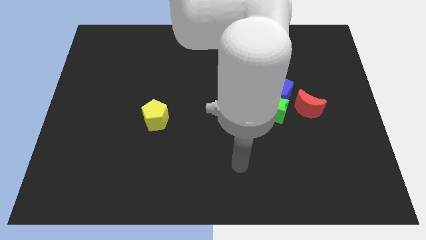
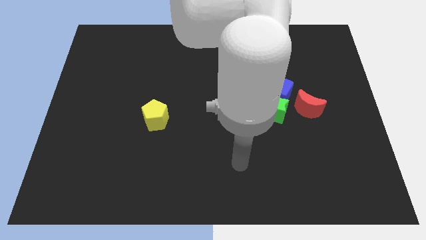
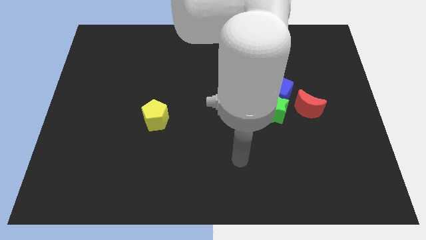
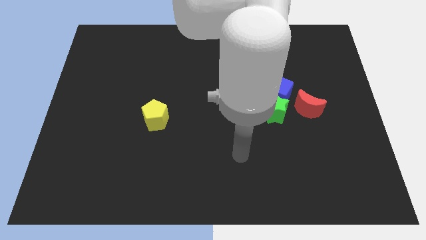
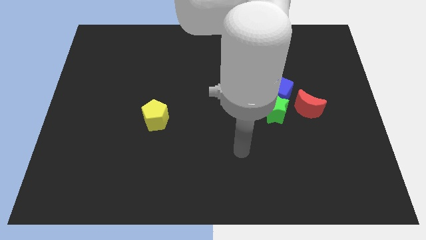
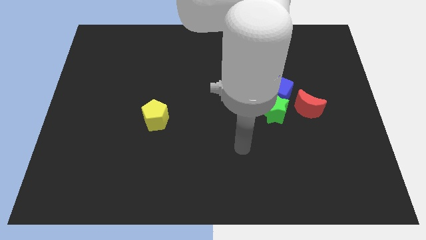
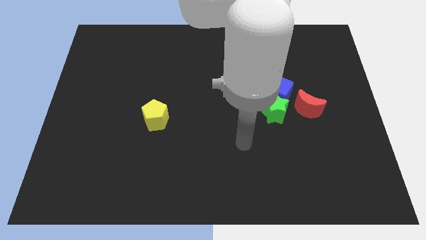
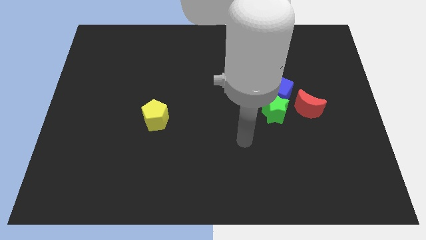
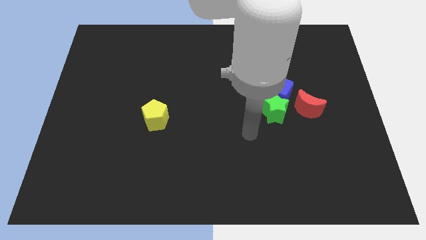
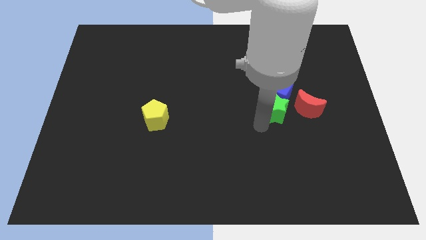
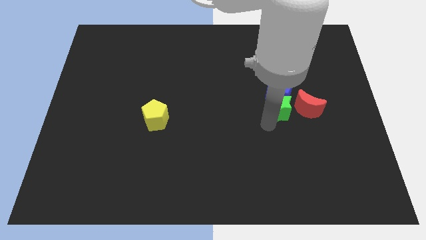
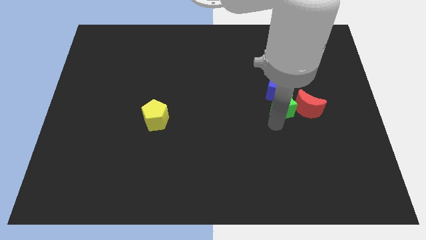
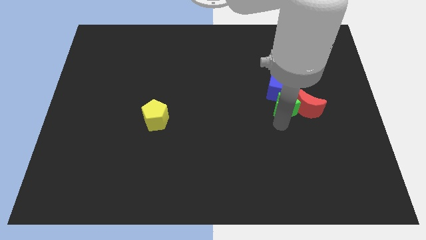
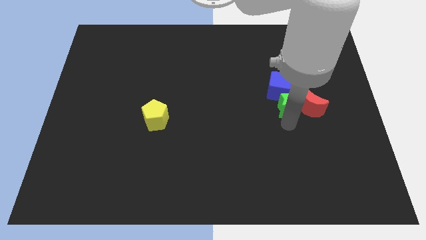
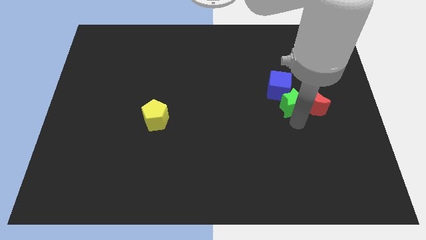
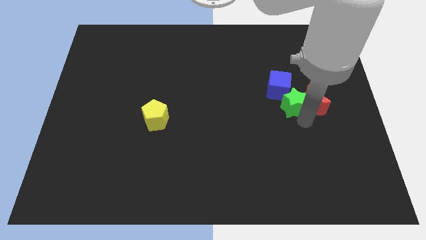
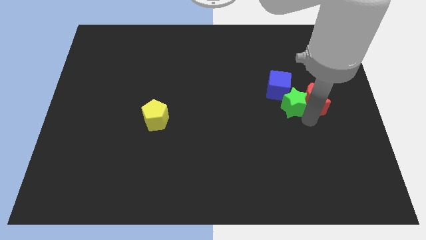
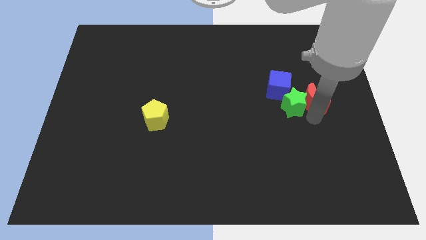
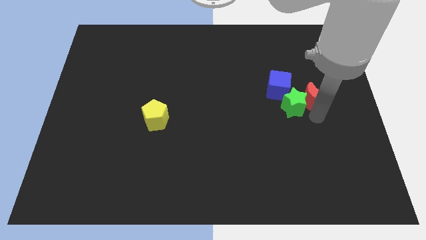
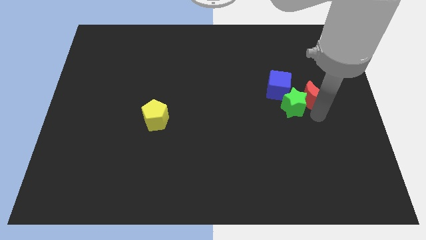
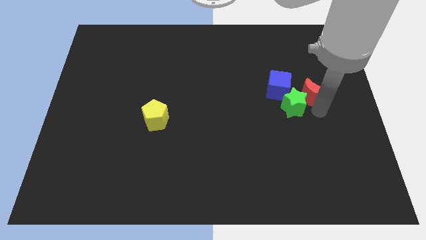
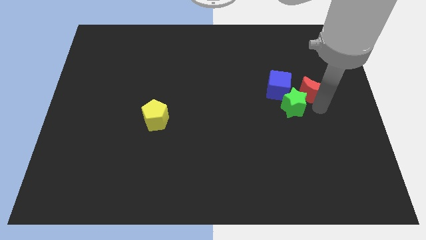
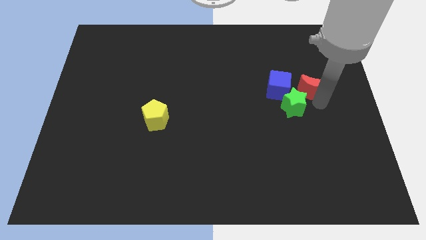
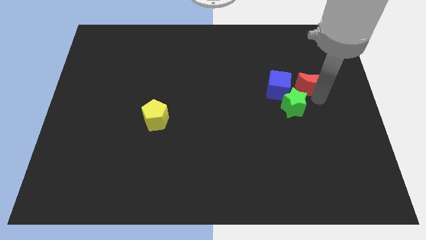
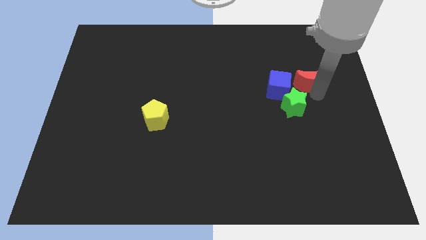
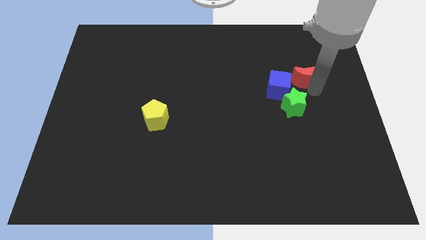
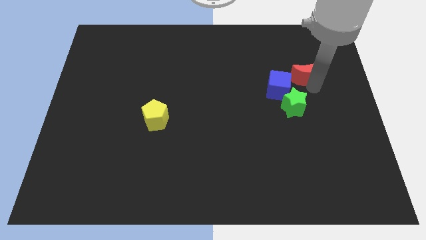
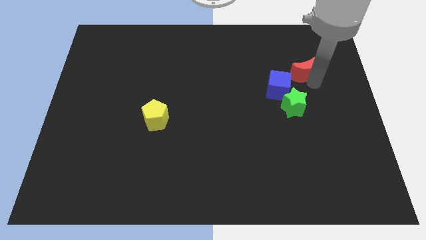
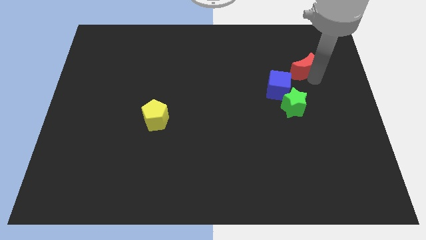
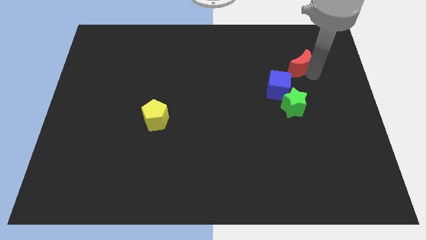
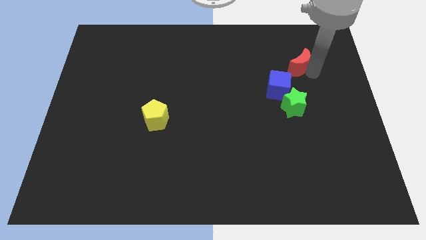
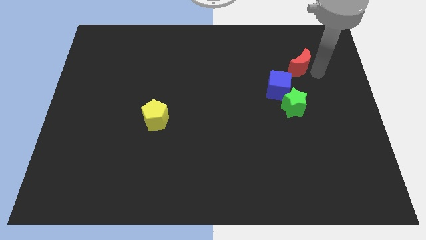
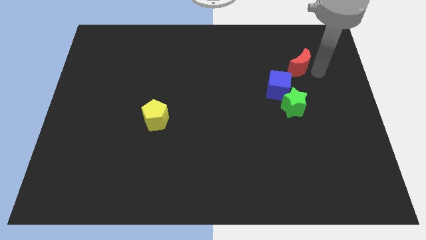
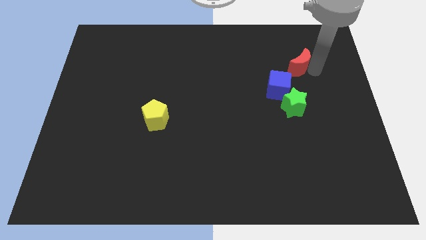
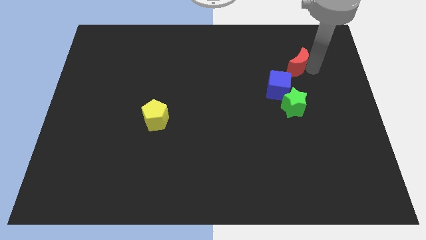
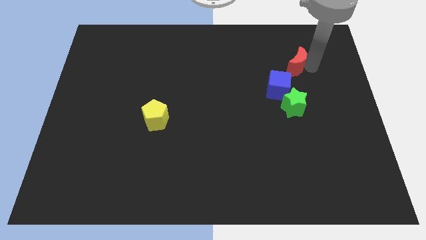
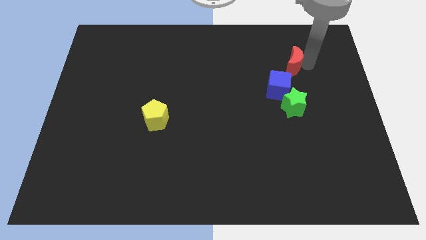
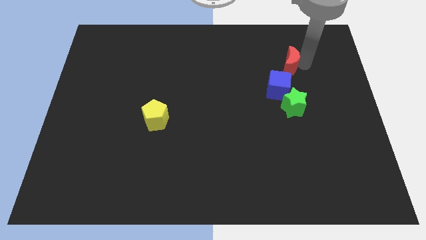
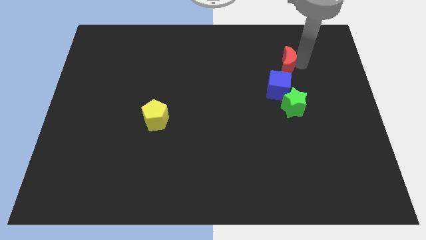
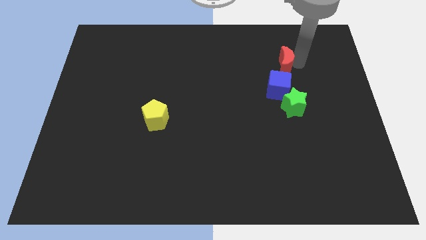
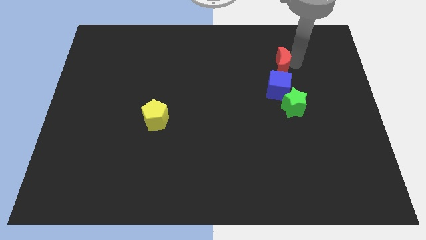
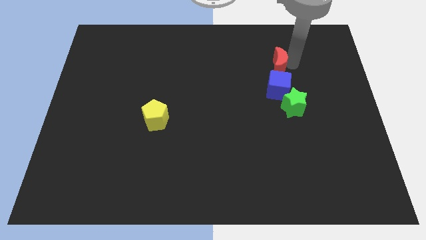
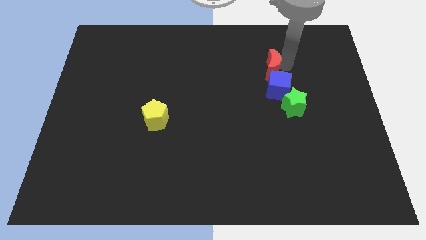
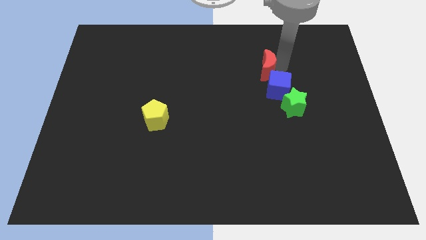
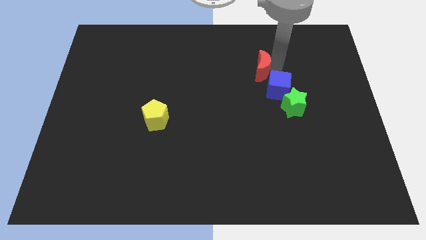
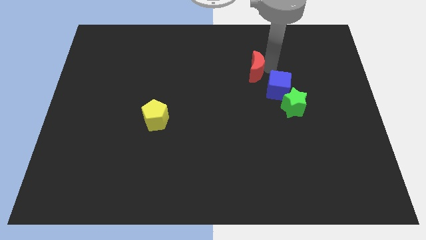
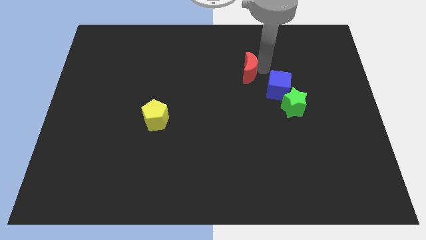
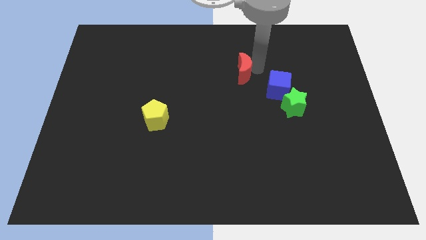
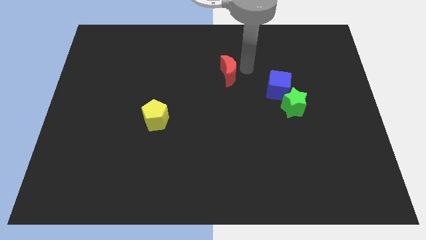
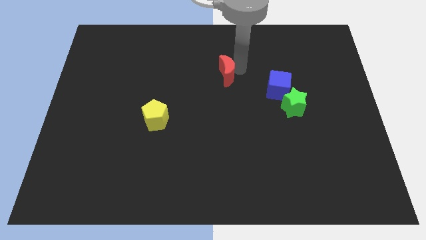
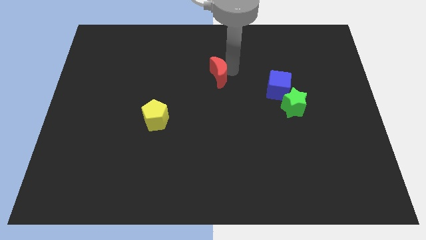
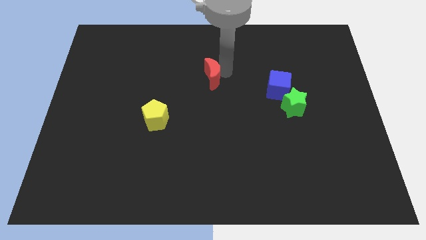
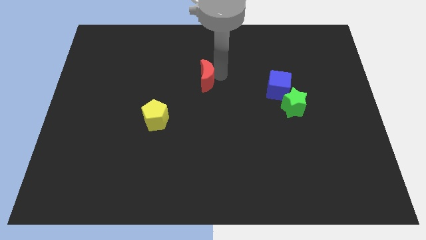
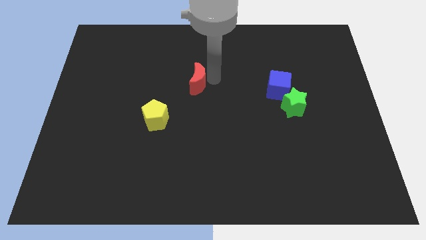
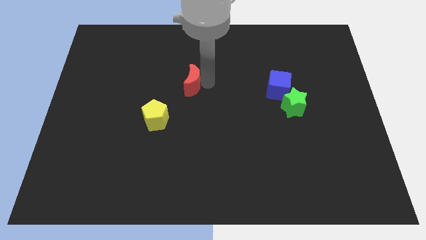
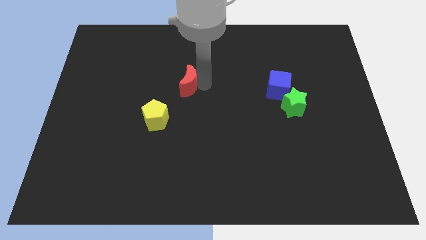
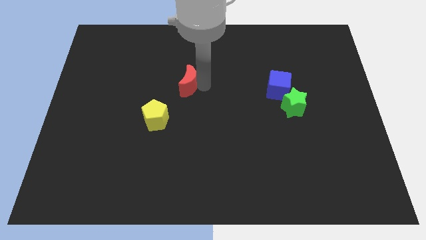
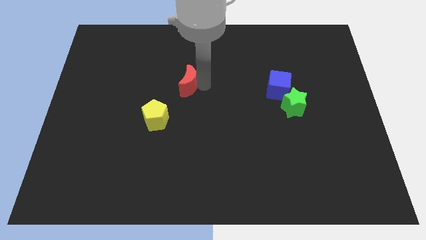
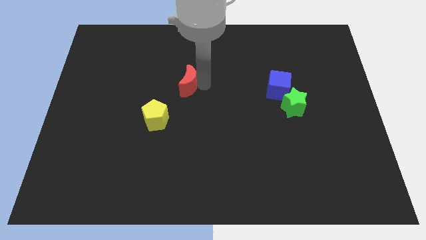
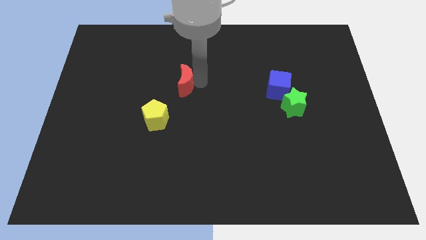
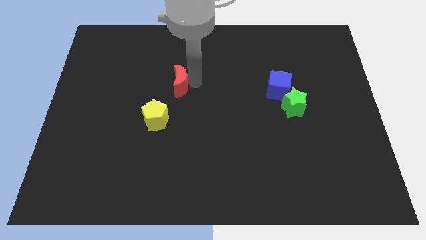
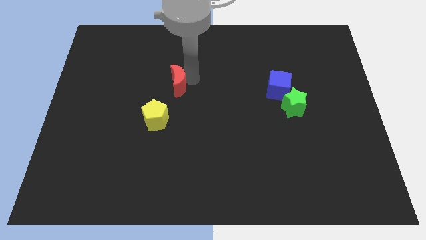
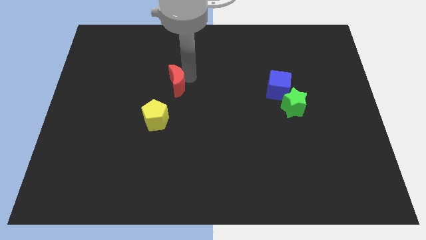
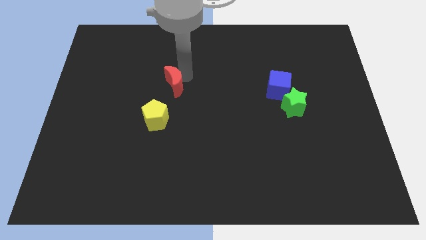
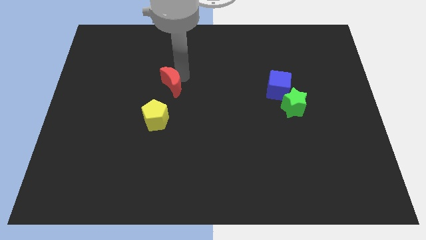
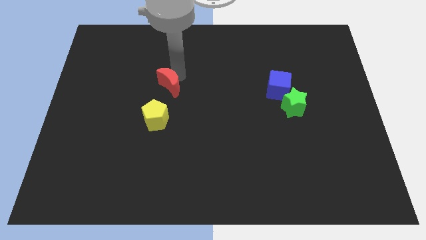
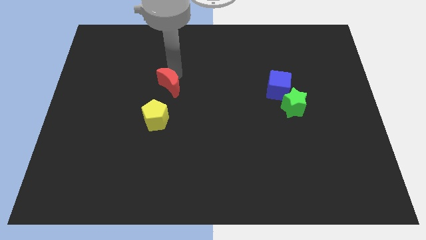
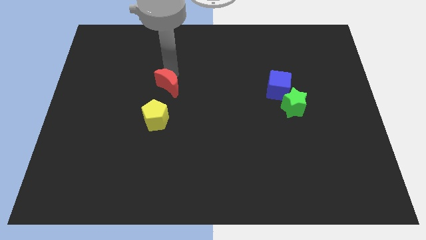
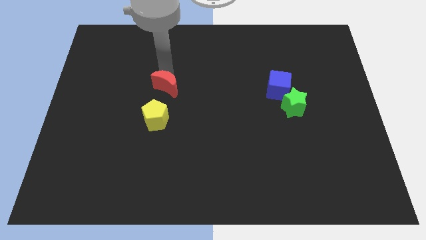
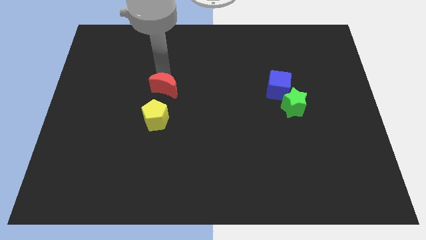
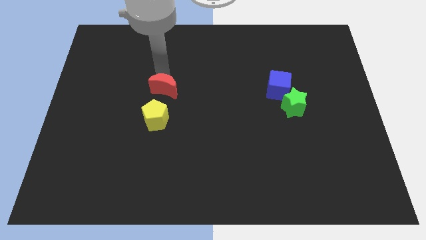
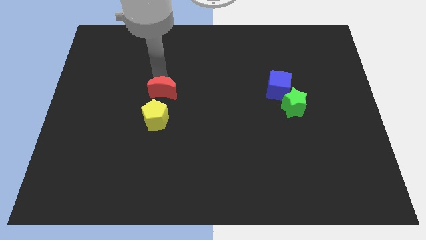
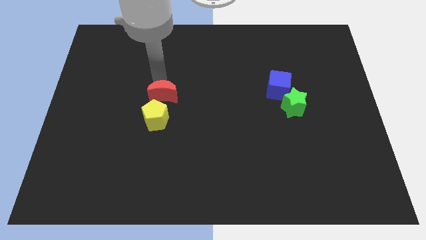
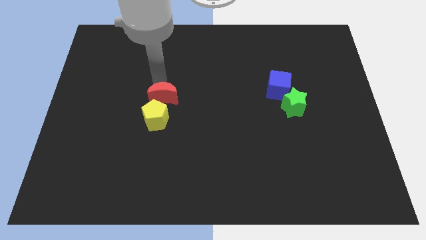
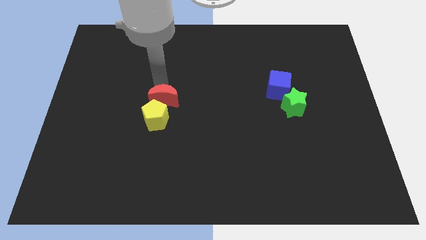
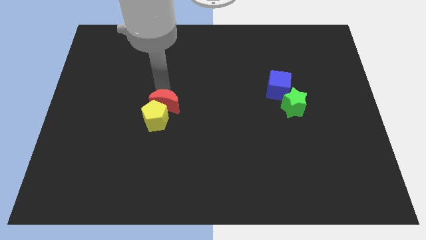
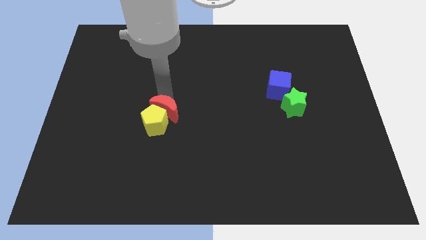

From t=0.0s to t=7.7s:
push the red moon to the yellow pentagon

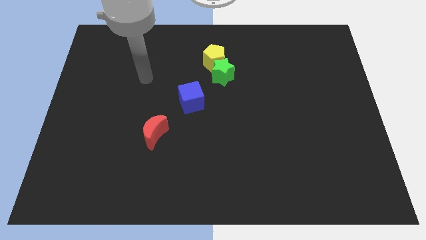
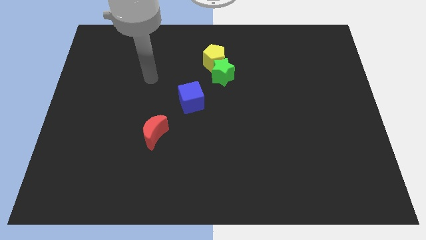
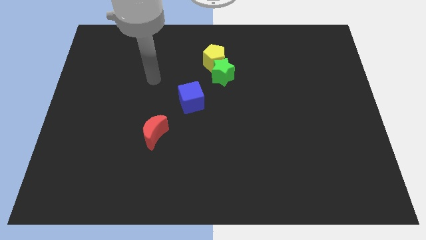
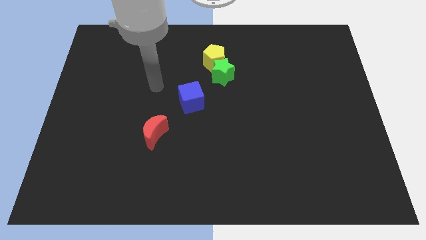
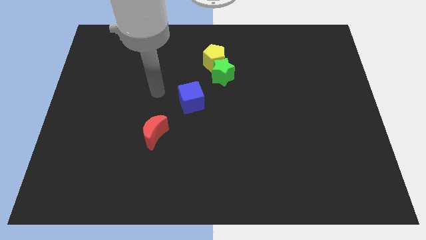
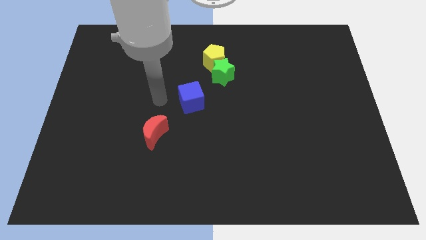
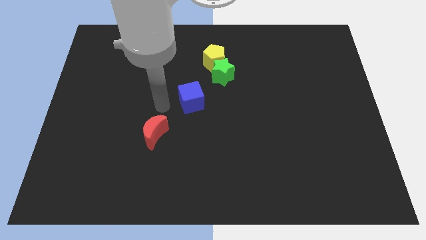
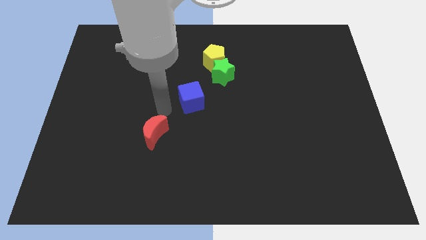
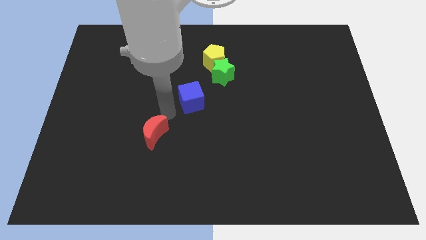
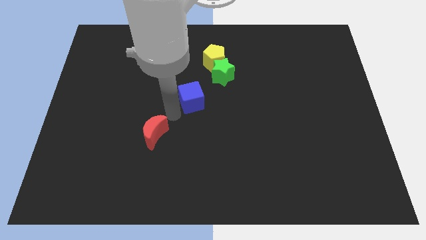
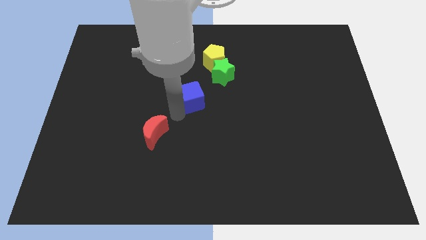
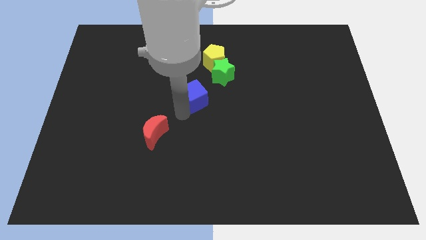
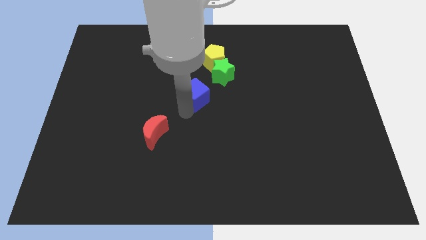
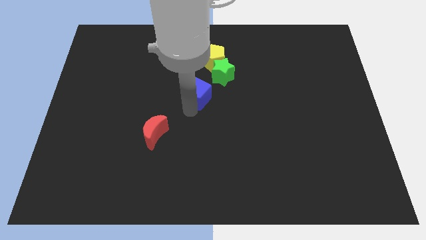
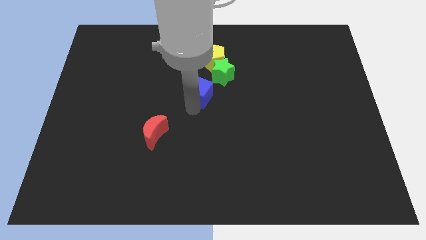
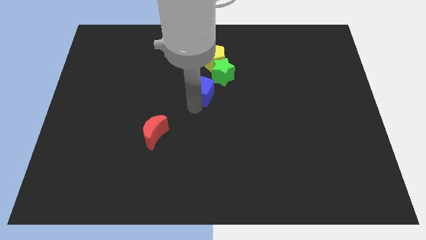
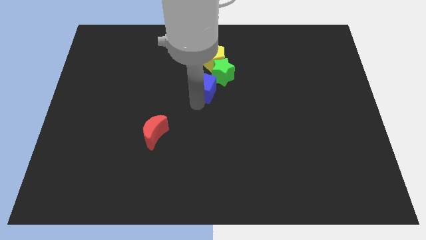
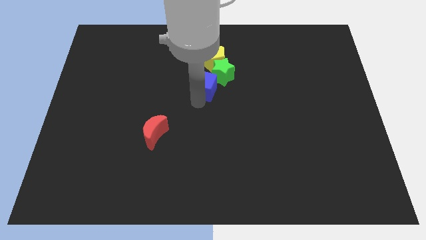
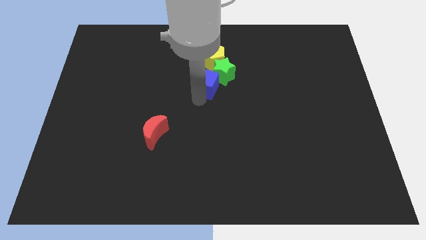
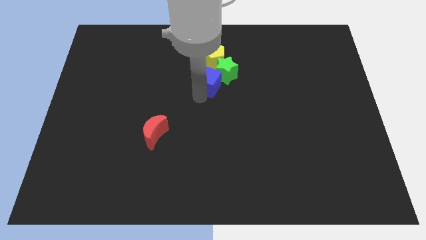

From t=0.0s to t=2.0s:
move the cube close to the star
